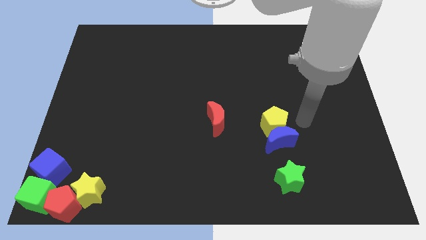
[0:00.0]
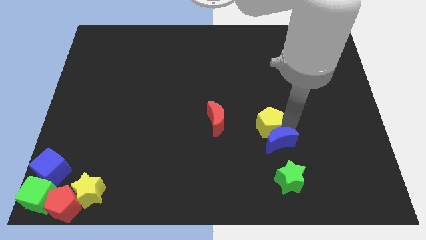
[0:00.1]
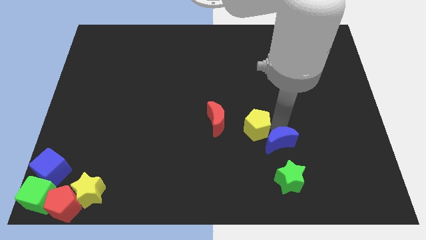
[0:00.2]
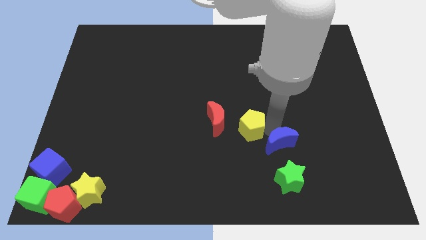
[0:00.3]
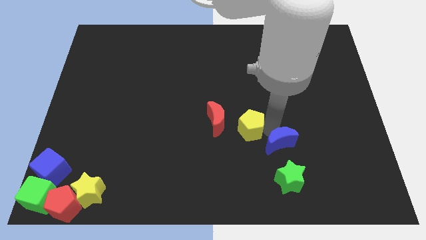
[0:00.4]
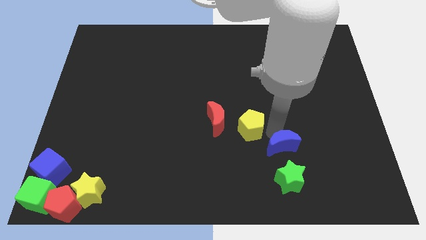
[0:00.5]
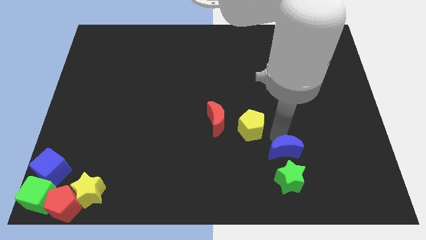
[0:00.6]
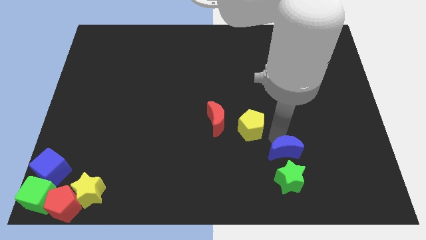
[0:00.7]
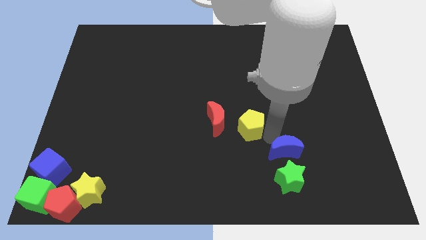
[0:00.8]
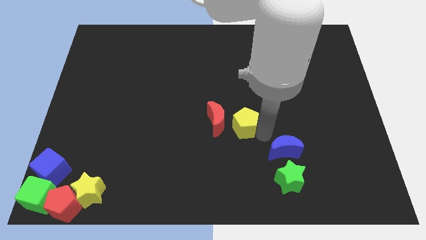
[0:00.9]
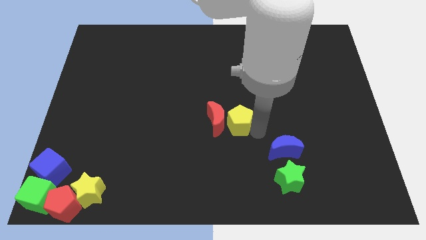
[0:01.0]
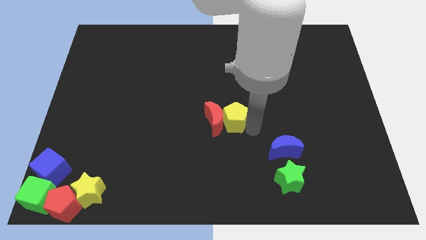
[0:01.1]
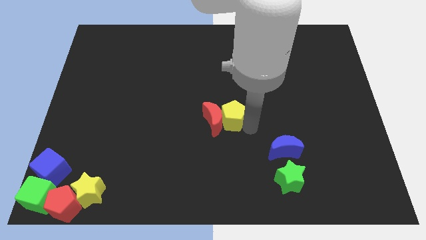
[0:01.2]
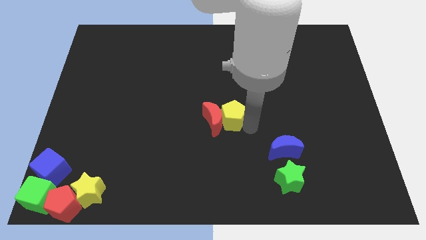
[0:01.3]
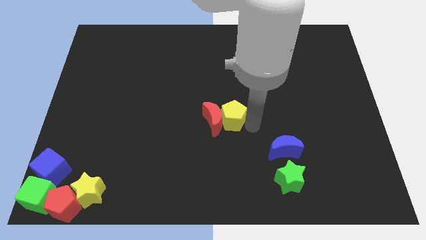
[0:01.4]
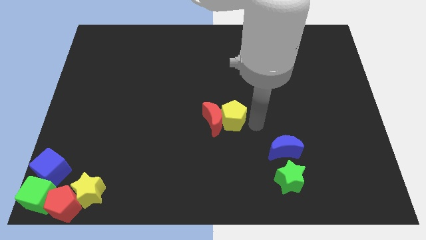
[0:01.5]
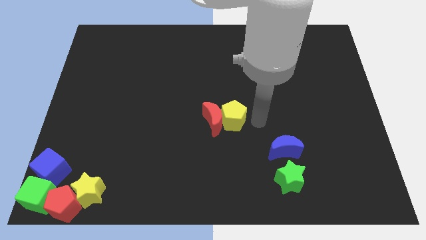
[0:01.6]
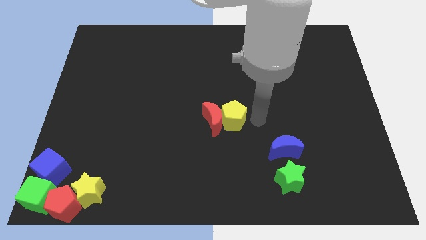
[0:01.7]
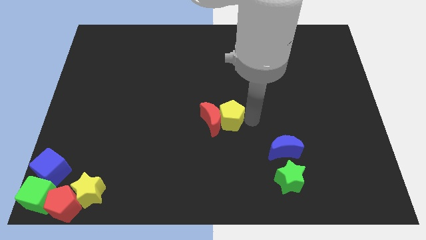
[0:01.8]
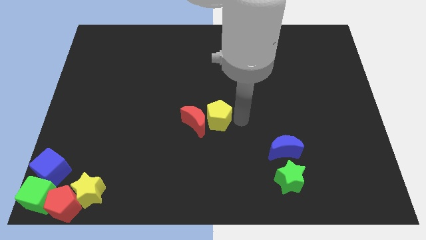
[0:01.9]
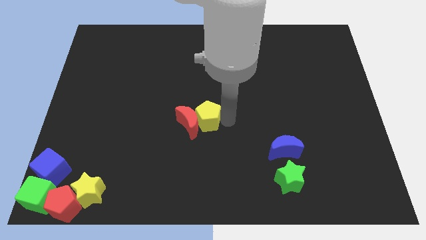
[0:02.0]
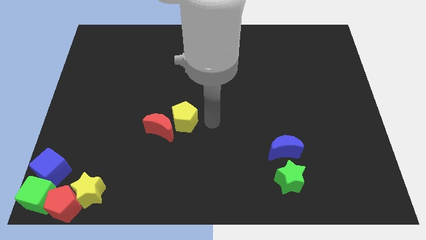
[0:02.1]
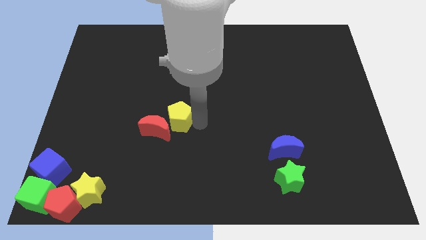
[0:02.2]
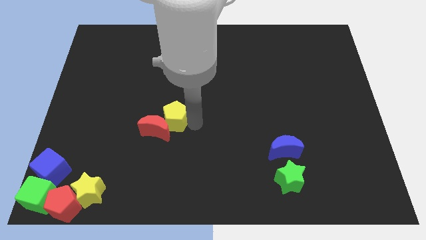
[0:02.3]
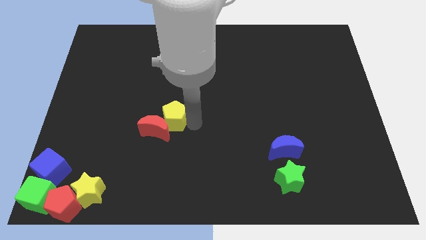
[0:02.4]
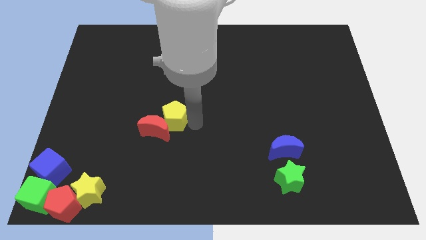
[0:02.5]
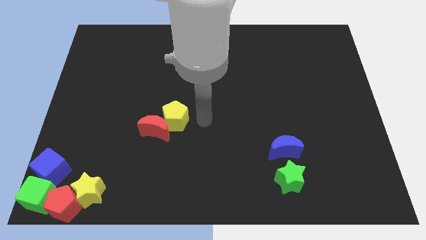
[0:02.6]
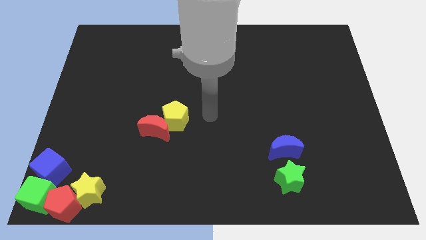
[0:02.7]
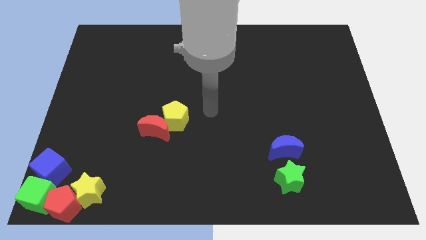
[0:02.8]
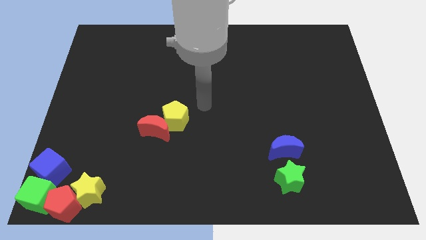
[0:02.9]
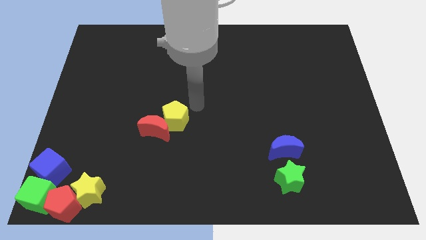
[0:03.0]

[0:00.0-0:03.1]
drag the yellow pentagon and red moon towards the yellow star

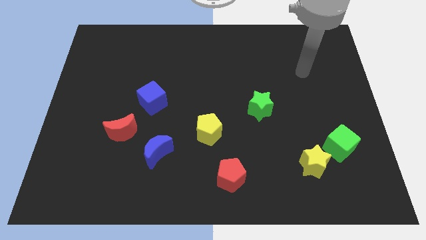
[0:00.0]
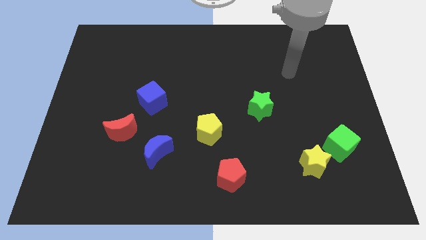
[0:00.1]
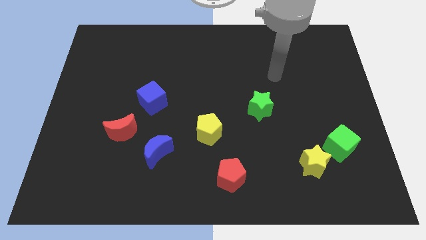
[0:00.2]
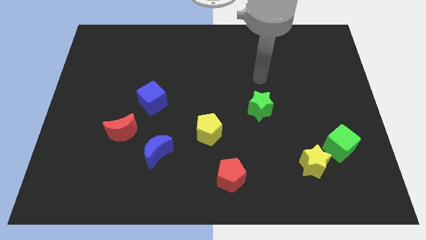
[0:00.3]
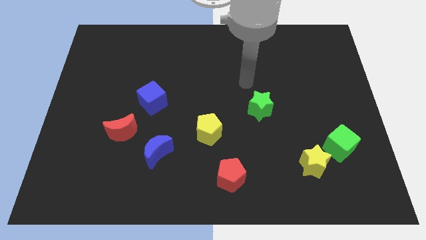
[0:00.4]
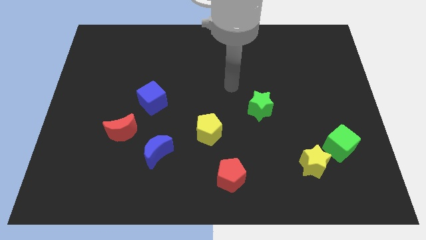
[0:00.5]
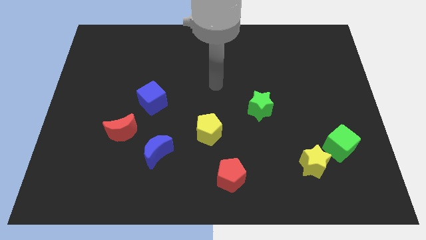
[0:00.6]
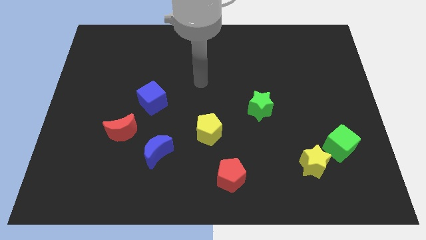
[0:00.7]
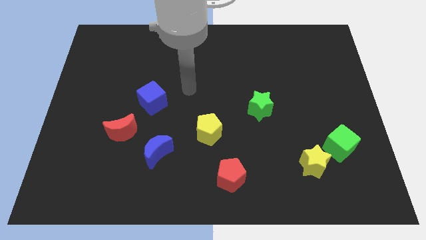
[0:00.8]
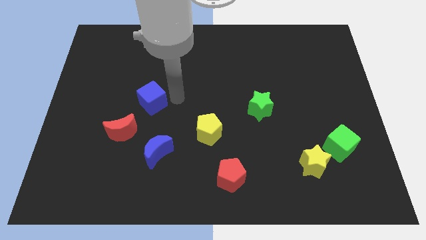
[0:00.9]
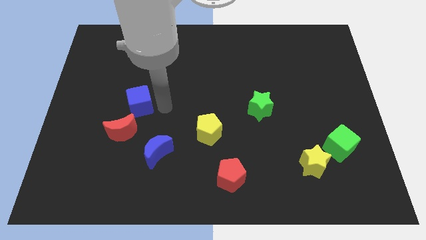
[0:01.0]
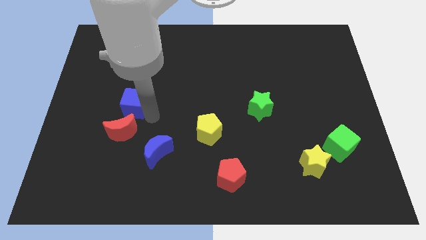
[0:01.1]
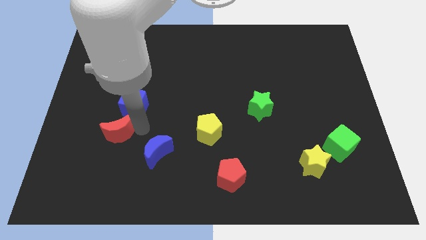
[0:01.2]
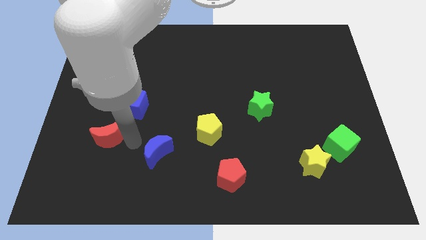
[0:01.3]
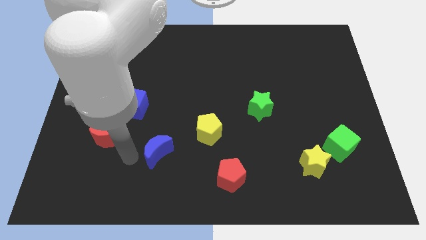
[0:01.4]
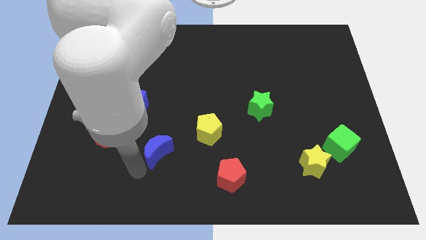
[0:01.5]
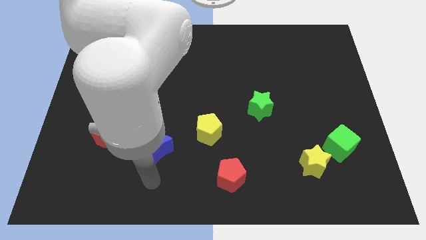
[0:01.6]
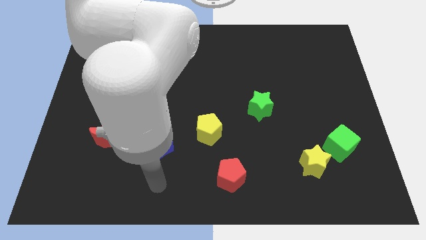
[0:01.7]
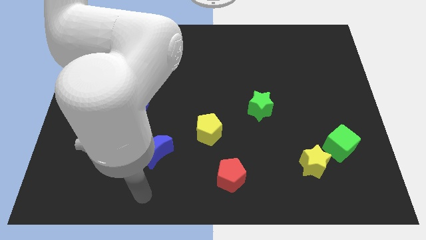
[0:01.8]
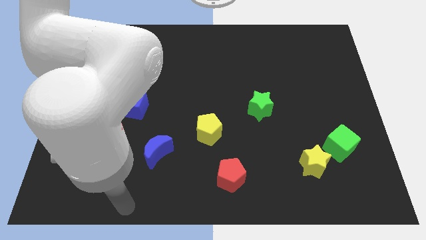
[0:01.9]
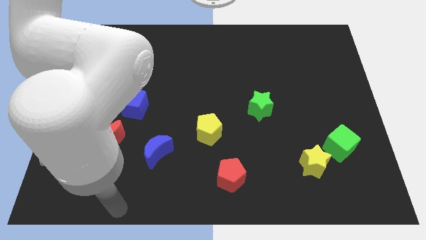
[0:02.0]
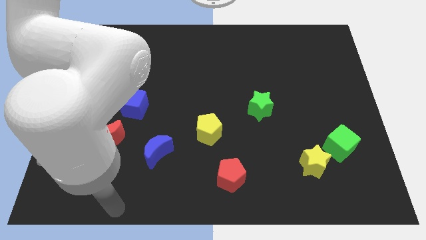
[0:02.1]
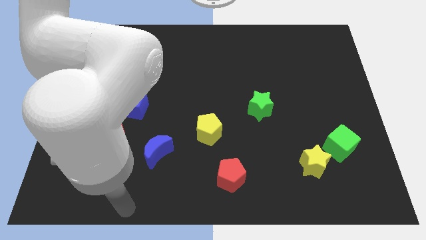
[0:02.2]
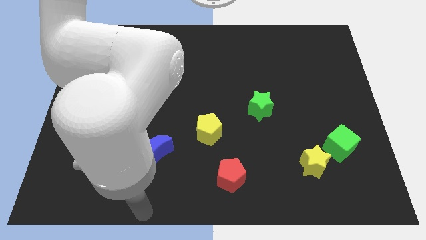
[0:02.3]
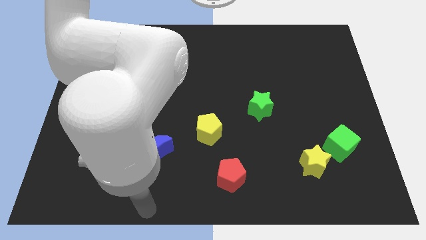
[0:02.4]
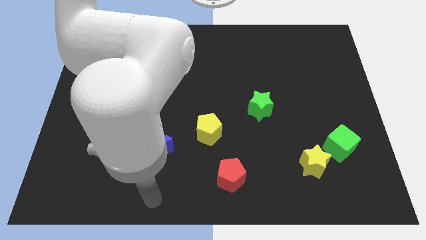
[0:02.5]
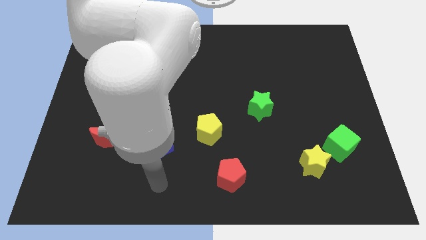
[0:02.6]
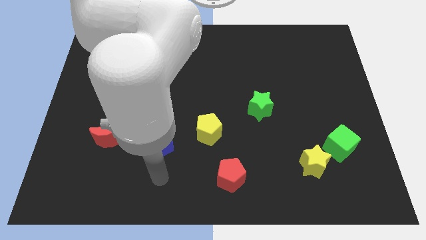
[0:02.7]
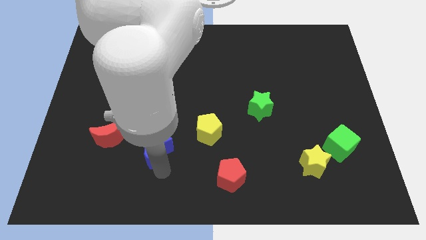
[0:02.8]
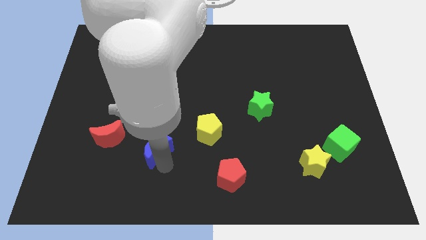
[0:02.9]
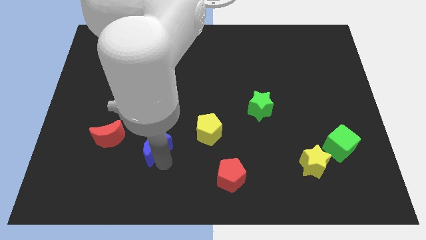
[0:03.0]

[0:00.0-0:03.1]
touch the bottom of blue moon

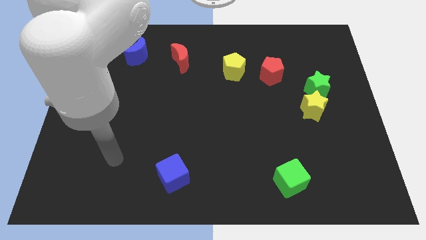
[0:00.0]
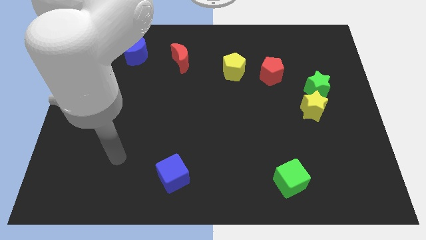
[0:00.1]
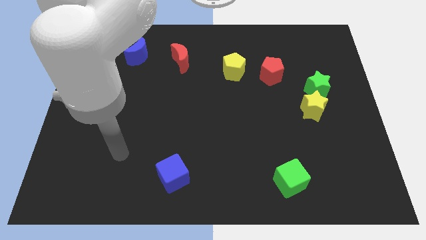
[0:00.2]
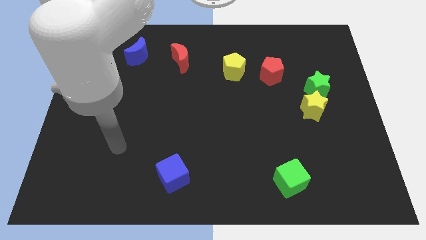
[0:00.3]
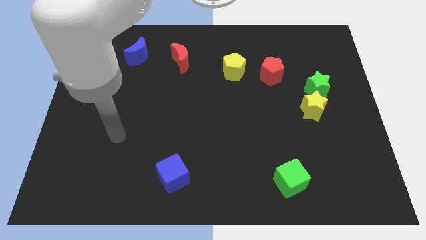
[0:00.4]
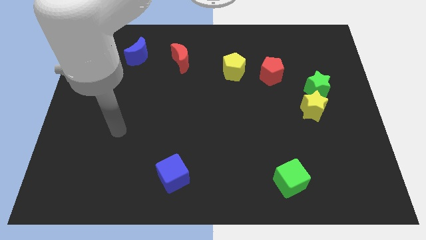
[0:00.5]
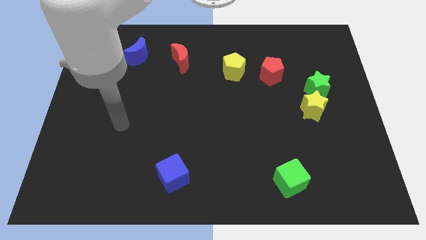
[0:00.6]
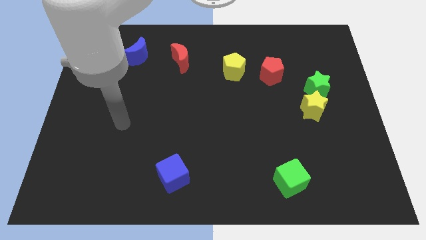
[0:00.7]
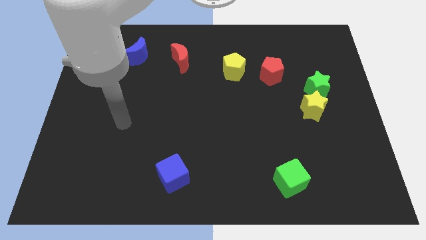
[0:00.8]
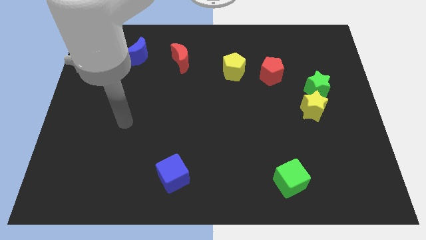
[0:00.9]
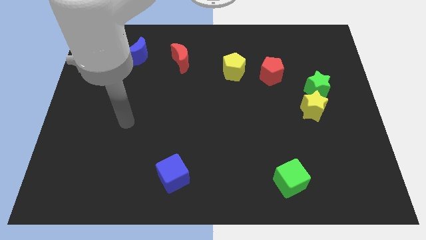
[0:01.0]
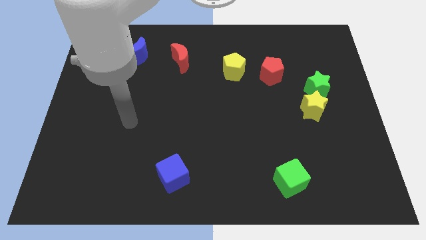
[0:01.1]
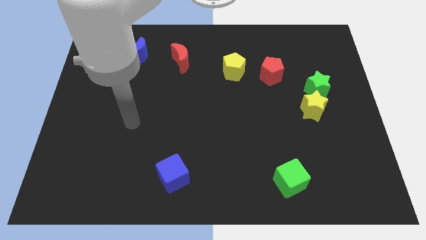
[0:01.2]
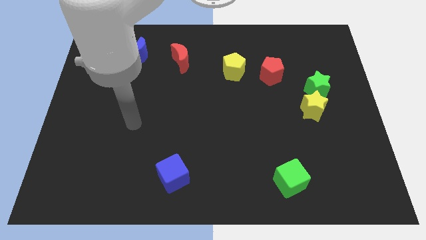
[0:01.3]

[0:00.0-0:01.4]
put your hand vertically below the blue moon

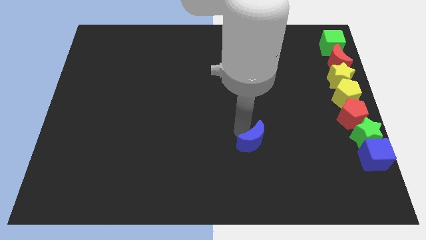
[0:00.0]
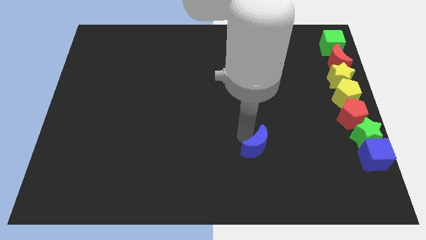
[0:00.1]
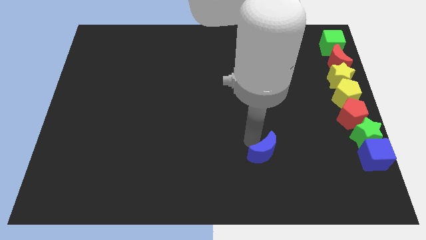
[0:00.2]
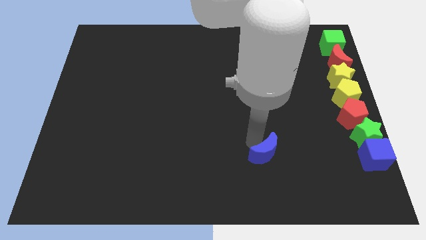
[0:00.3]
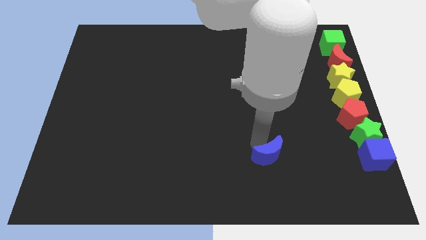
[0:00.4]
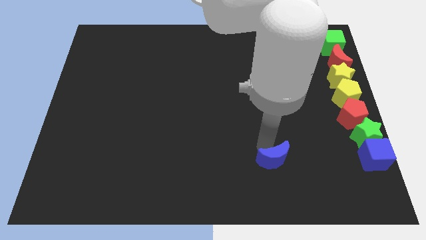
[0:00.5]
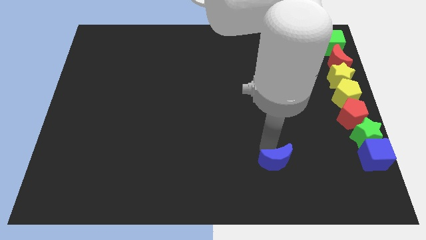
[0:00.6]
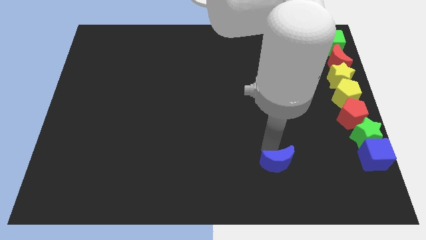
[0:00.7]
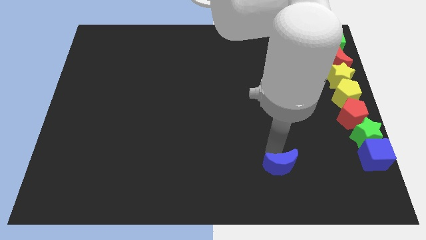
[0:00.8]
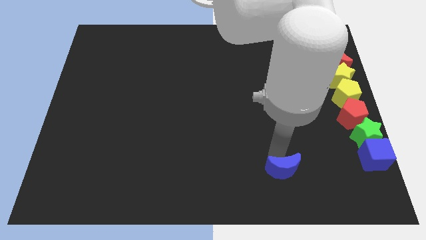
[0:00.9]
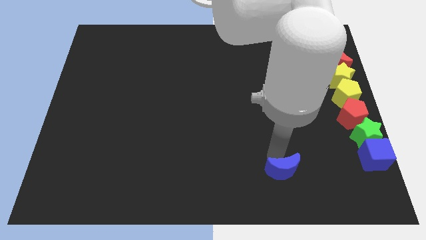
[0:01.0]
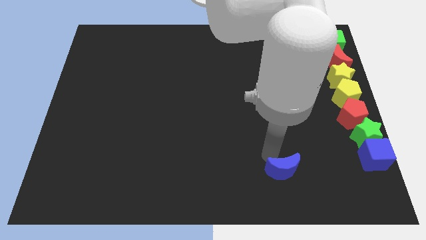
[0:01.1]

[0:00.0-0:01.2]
push the blue crescent to the left of the blue cube
